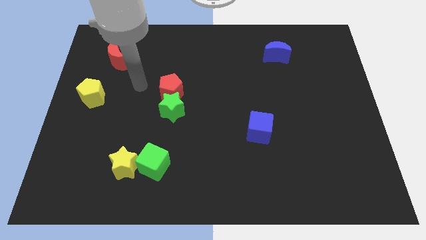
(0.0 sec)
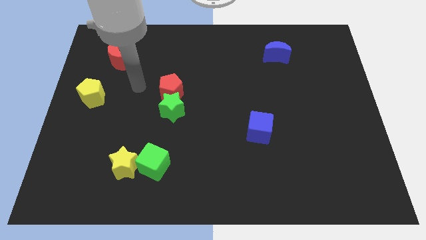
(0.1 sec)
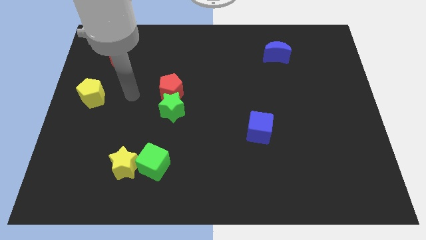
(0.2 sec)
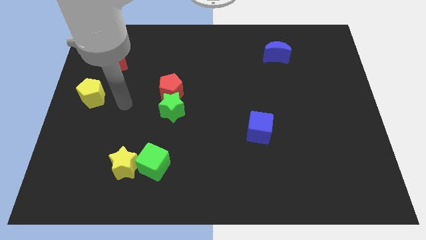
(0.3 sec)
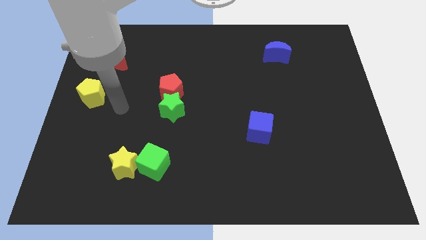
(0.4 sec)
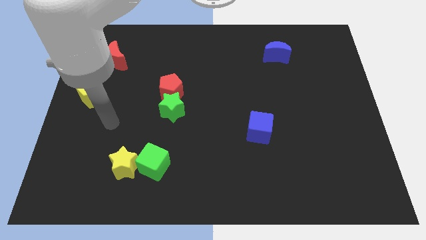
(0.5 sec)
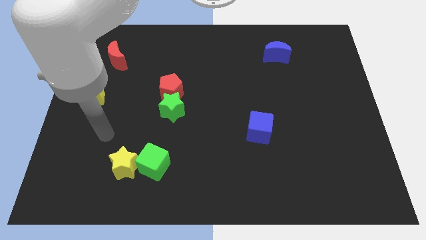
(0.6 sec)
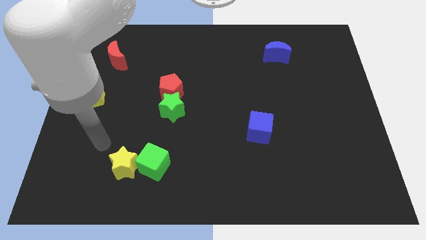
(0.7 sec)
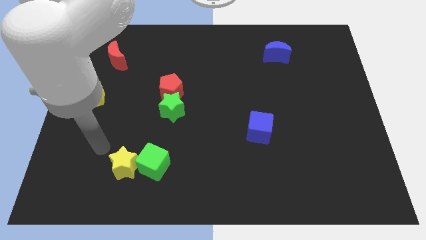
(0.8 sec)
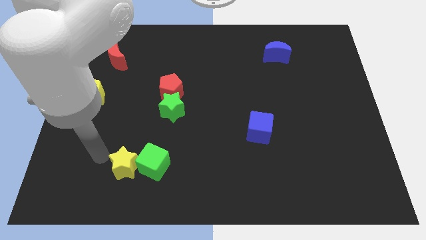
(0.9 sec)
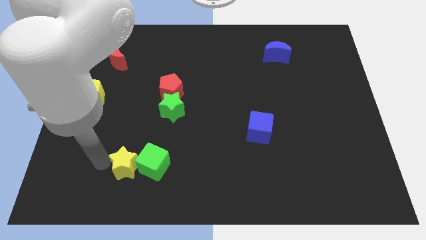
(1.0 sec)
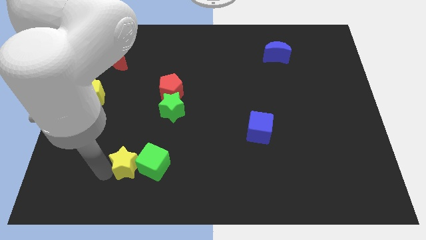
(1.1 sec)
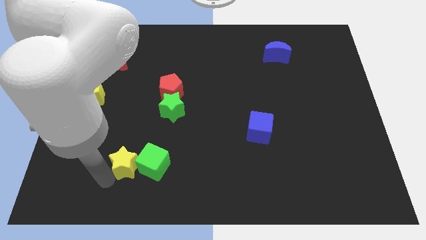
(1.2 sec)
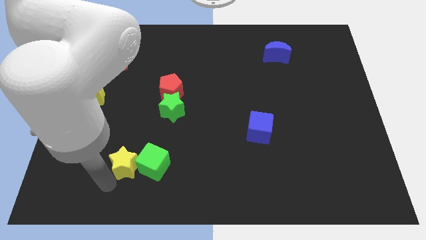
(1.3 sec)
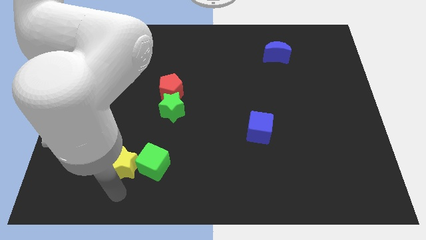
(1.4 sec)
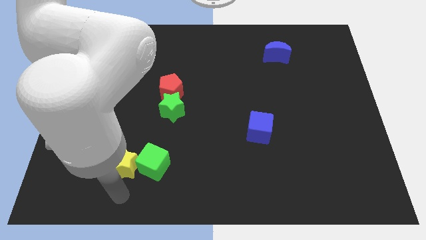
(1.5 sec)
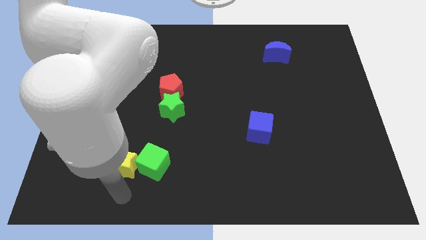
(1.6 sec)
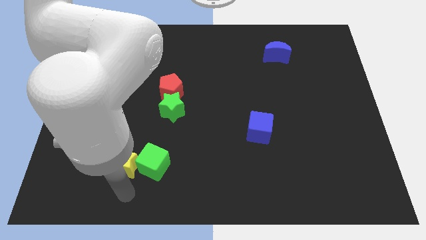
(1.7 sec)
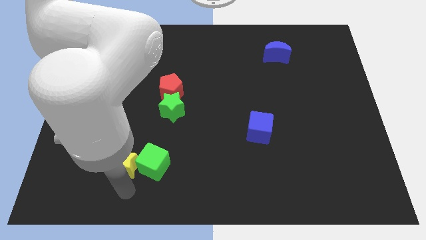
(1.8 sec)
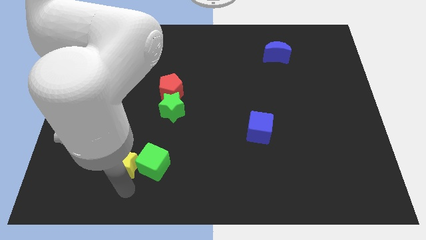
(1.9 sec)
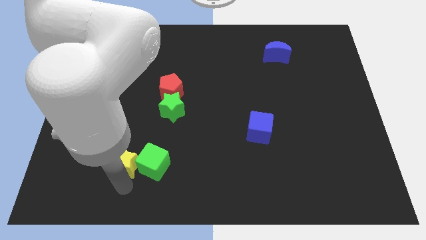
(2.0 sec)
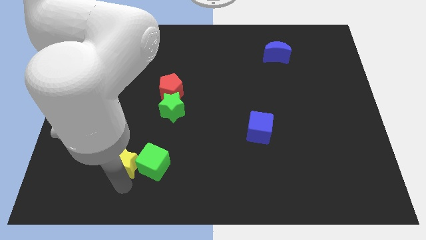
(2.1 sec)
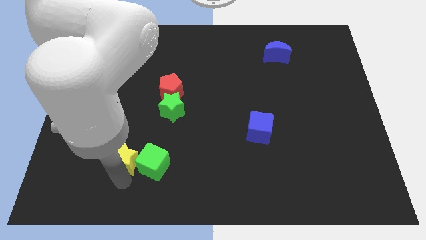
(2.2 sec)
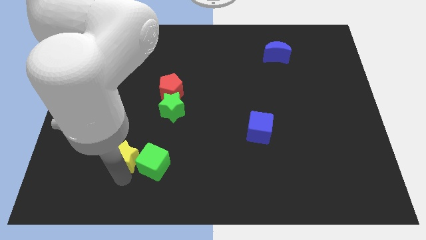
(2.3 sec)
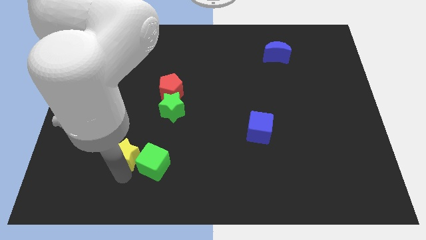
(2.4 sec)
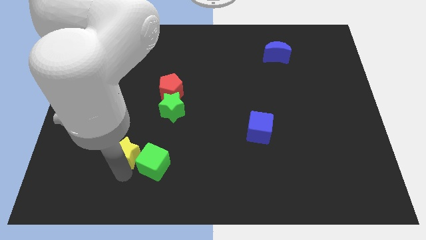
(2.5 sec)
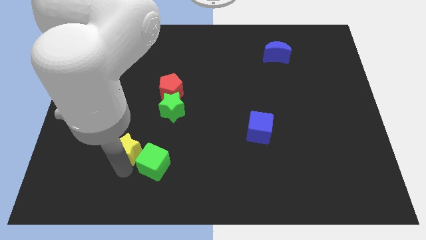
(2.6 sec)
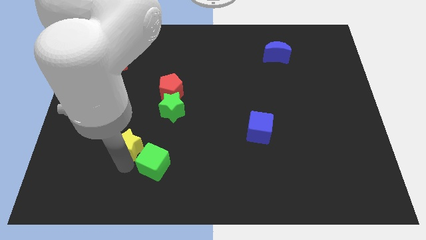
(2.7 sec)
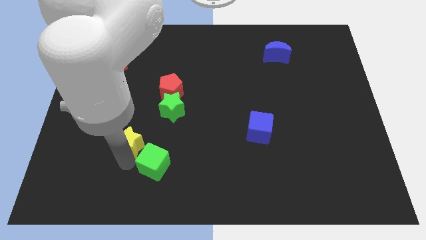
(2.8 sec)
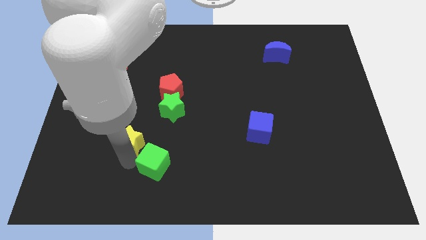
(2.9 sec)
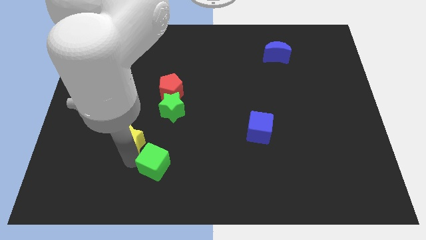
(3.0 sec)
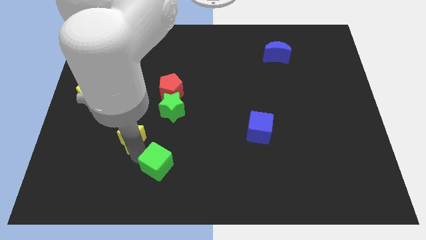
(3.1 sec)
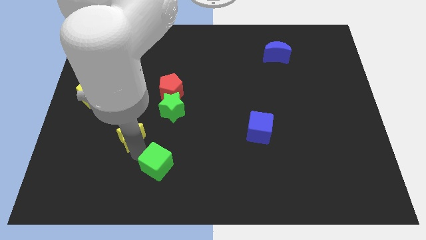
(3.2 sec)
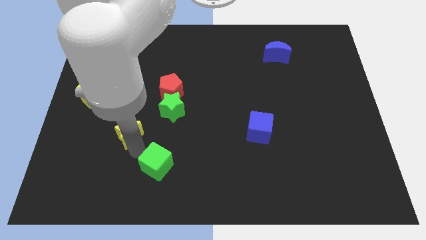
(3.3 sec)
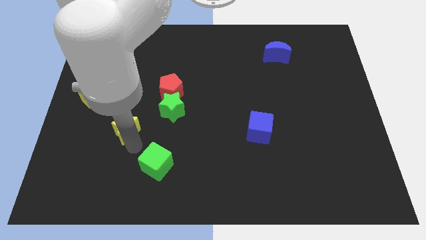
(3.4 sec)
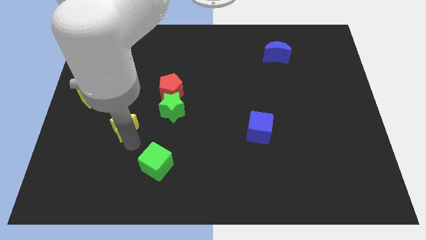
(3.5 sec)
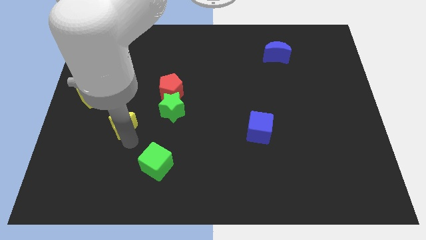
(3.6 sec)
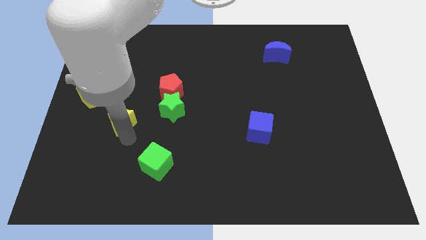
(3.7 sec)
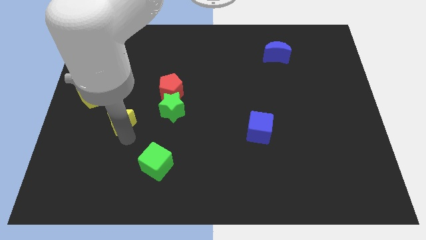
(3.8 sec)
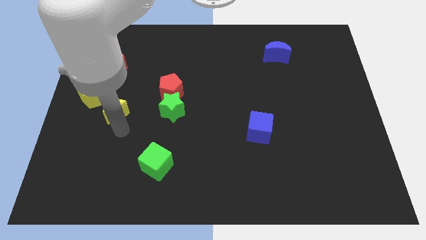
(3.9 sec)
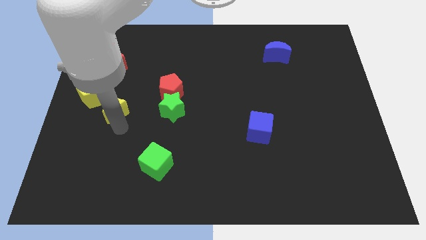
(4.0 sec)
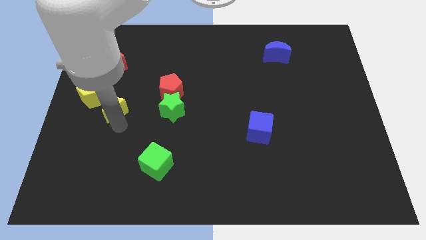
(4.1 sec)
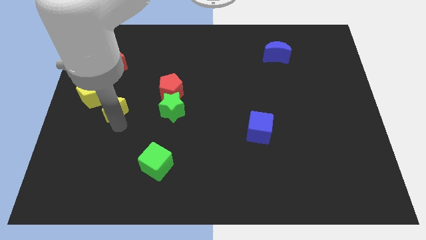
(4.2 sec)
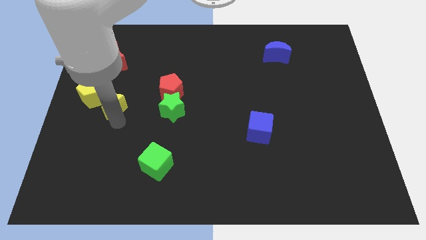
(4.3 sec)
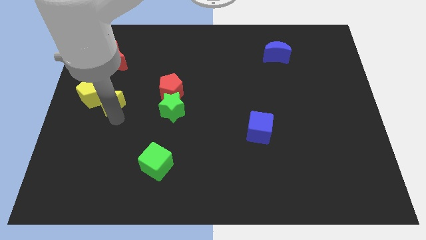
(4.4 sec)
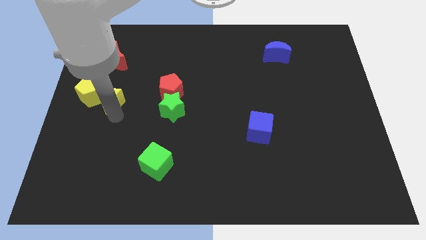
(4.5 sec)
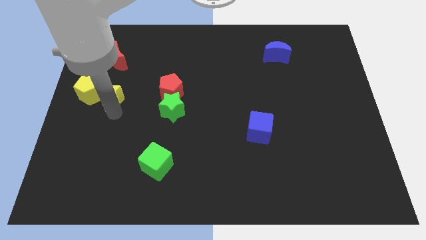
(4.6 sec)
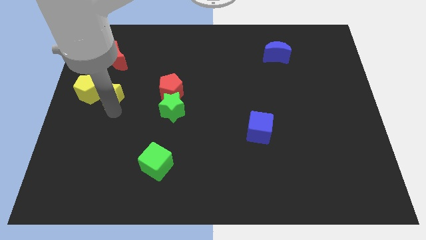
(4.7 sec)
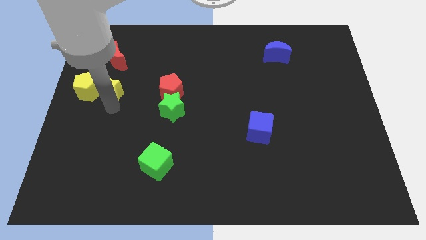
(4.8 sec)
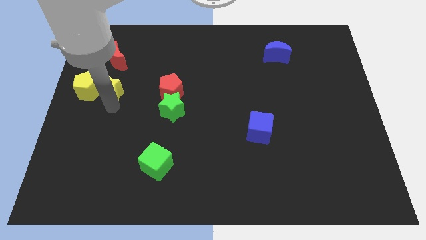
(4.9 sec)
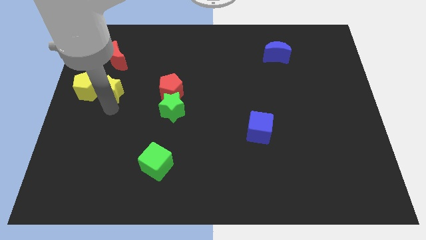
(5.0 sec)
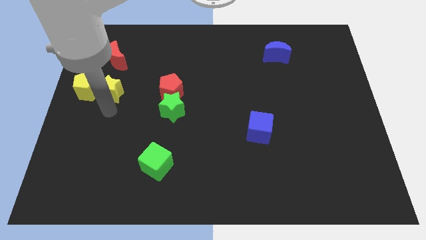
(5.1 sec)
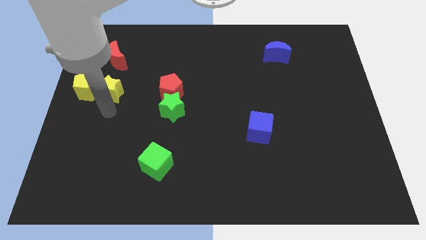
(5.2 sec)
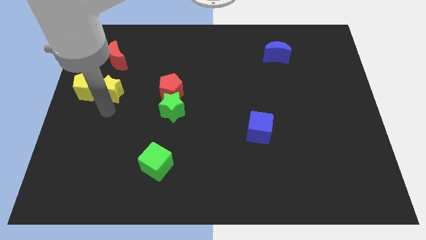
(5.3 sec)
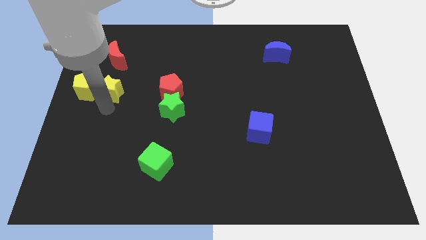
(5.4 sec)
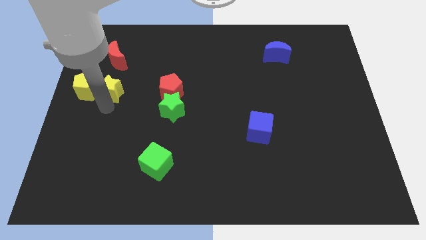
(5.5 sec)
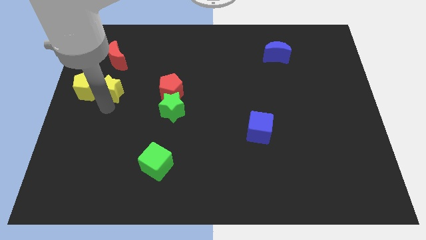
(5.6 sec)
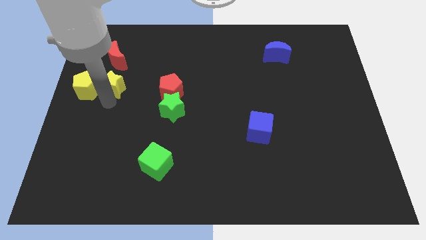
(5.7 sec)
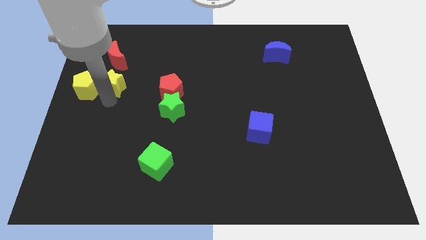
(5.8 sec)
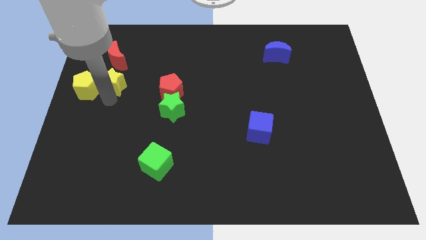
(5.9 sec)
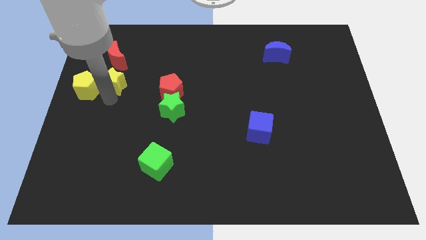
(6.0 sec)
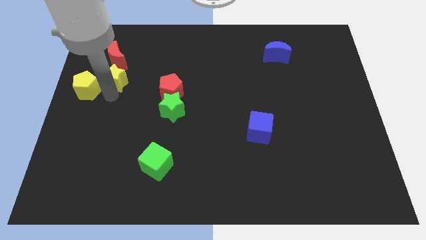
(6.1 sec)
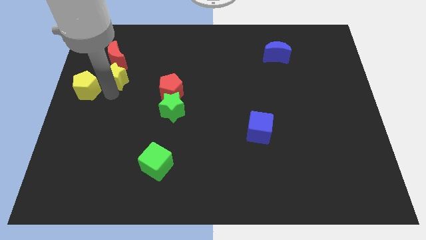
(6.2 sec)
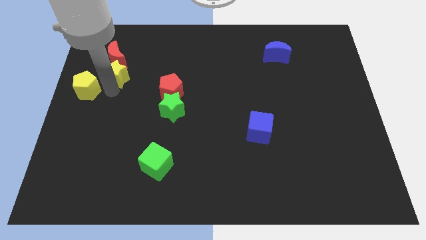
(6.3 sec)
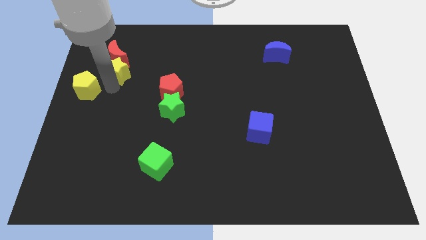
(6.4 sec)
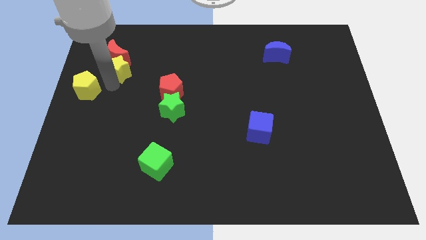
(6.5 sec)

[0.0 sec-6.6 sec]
push the yellow star to the red moon

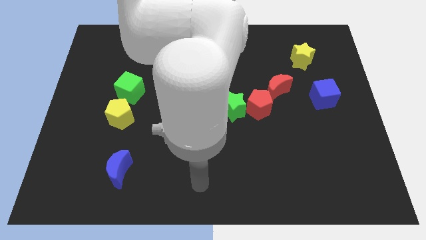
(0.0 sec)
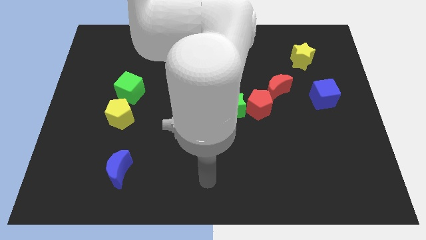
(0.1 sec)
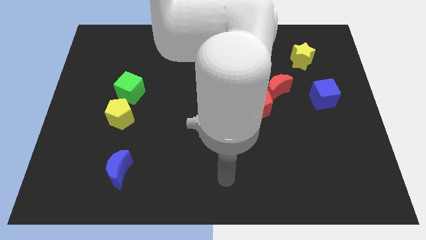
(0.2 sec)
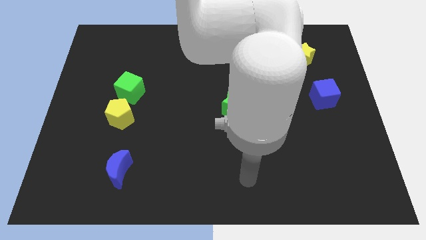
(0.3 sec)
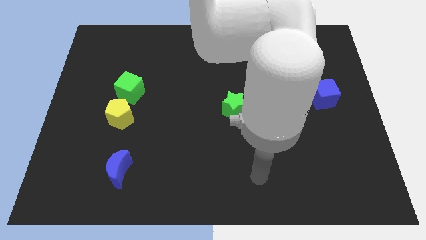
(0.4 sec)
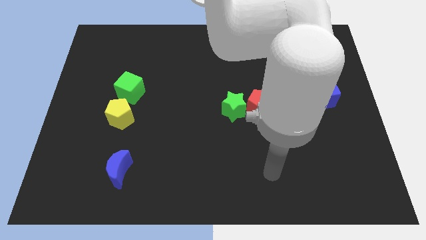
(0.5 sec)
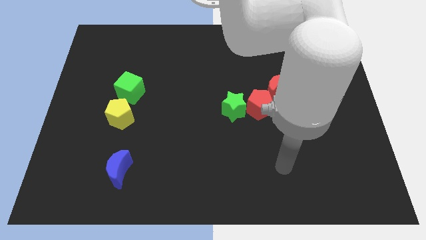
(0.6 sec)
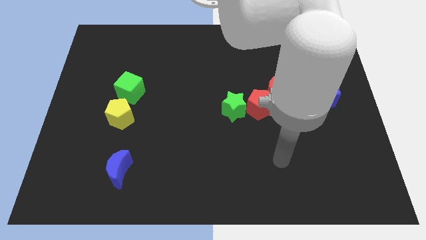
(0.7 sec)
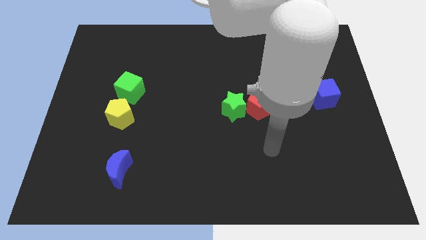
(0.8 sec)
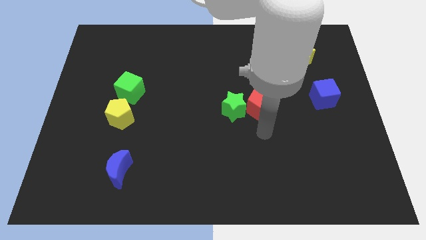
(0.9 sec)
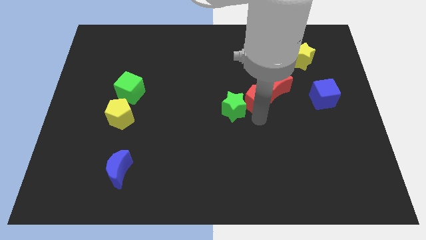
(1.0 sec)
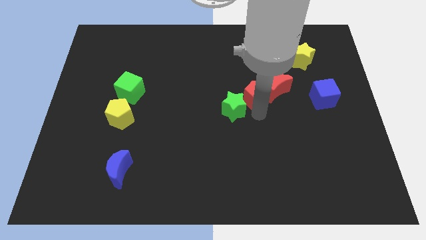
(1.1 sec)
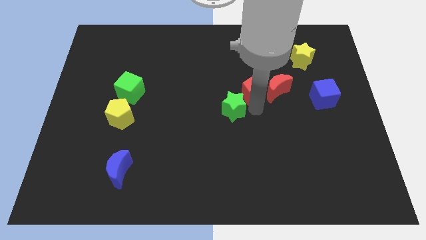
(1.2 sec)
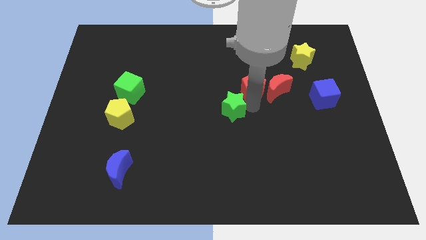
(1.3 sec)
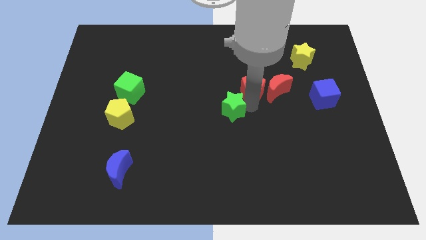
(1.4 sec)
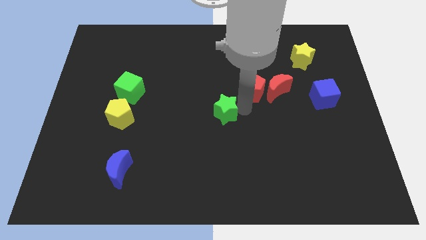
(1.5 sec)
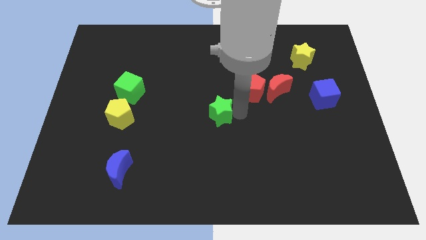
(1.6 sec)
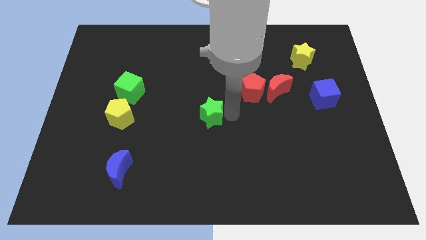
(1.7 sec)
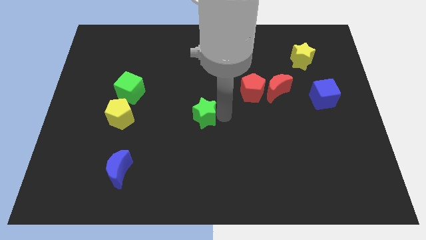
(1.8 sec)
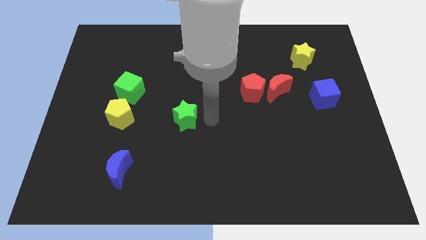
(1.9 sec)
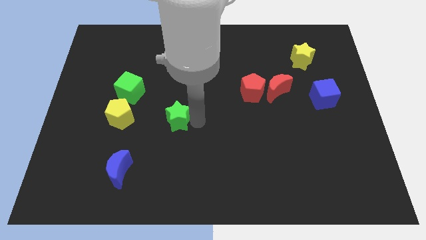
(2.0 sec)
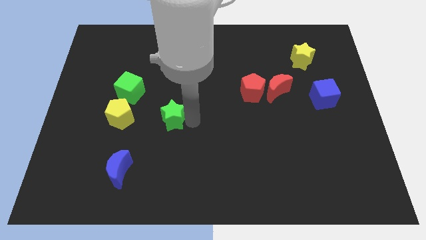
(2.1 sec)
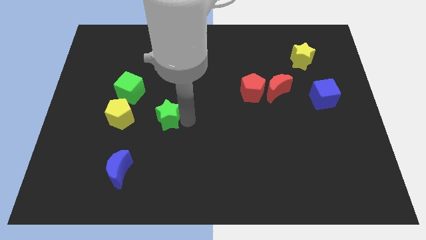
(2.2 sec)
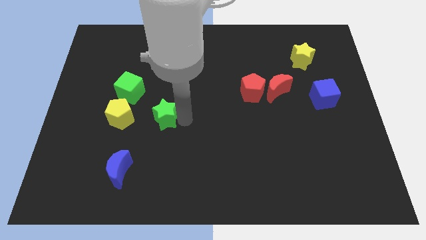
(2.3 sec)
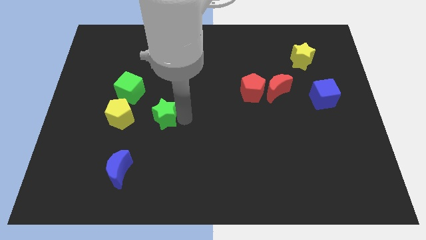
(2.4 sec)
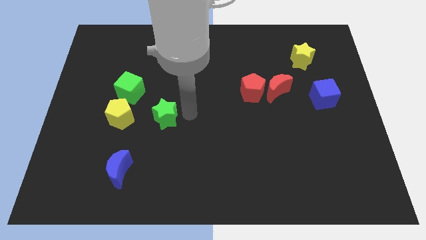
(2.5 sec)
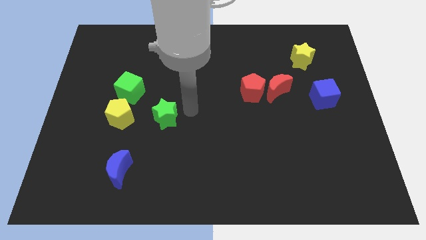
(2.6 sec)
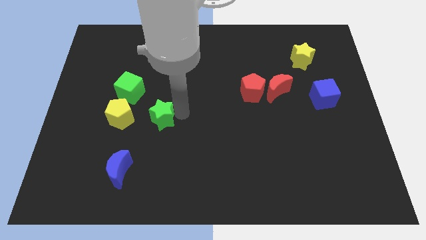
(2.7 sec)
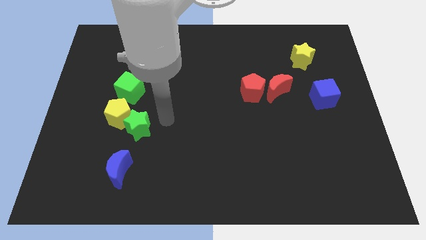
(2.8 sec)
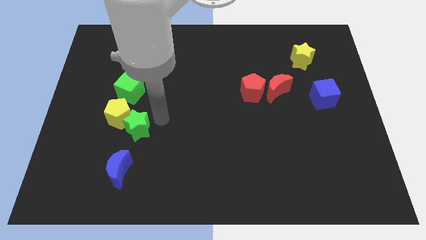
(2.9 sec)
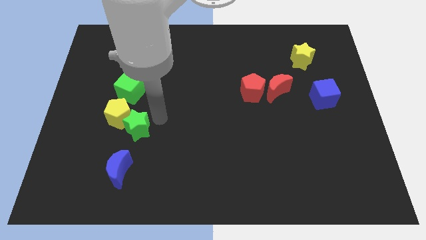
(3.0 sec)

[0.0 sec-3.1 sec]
move the green star to the yellow pentagon
